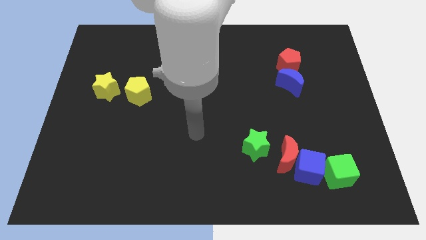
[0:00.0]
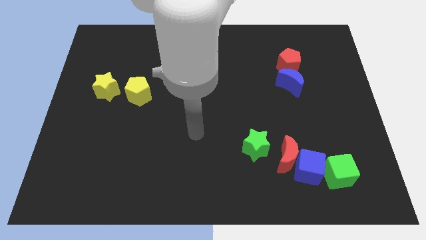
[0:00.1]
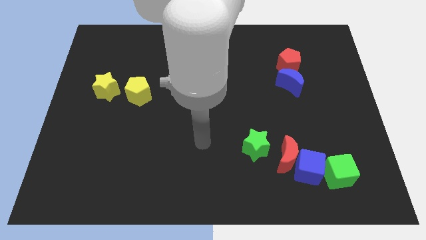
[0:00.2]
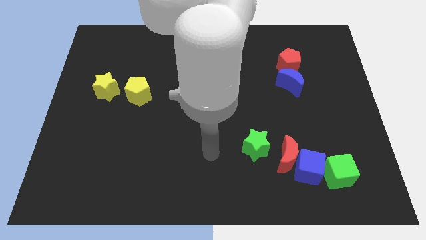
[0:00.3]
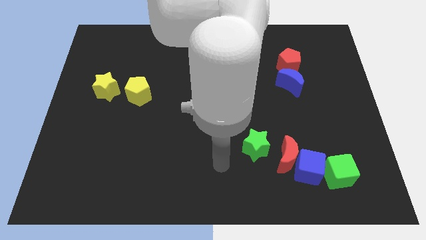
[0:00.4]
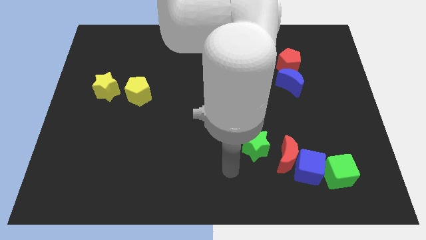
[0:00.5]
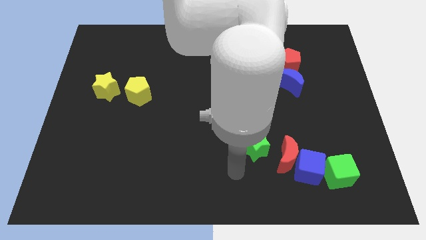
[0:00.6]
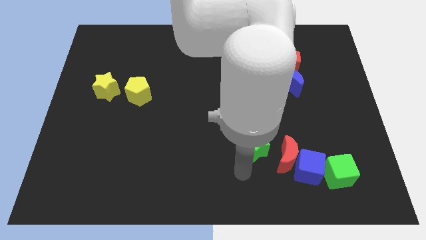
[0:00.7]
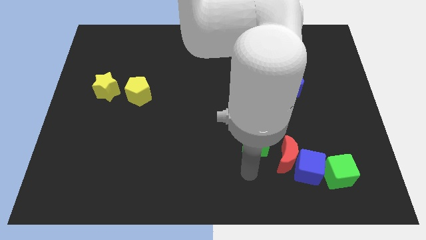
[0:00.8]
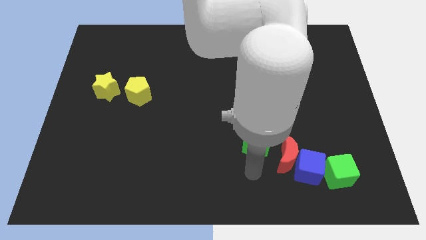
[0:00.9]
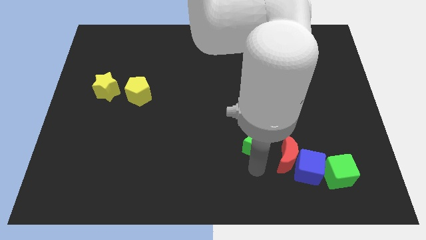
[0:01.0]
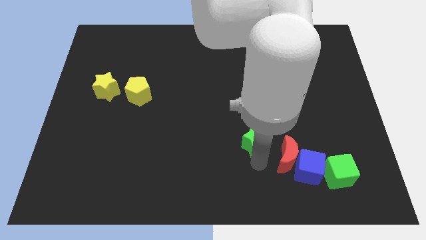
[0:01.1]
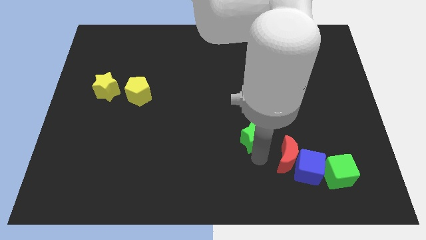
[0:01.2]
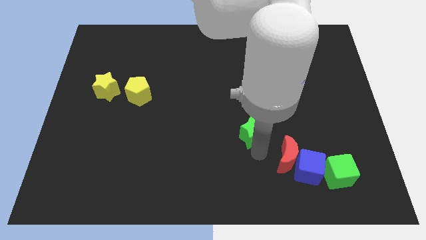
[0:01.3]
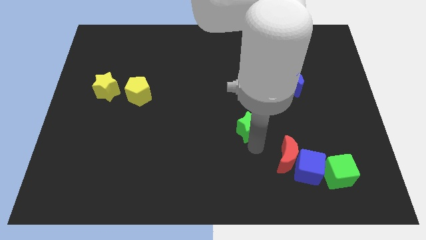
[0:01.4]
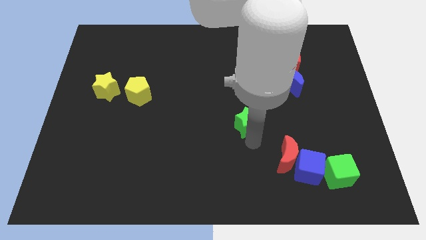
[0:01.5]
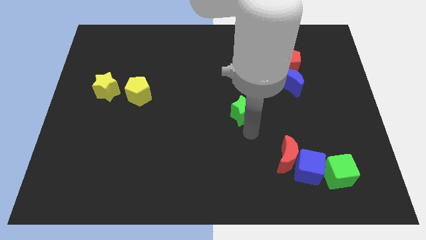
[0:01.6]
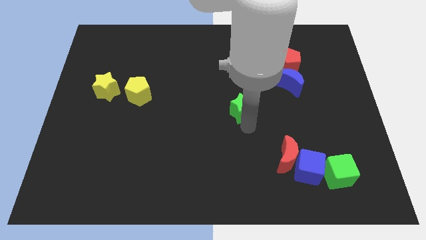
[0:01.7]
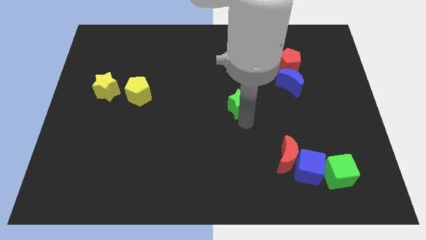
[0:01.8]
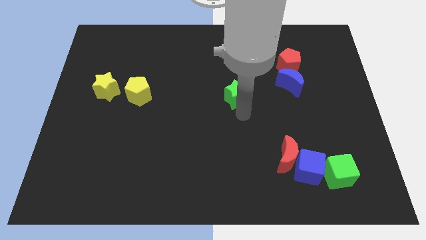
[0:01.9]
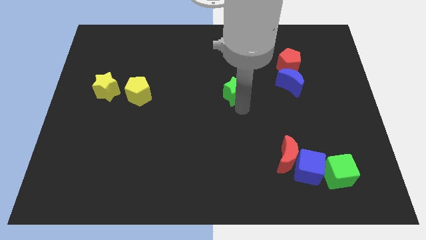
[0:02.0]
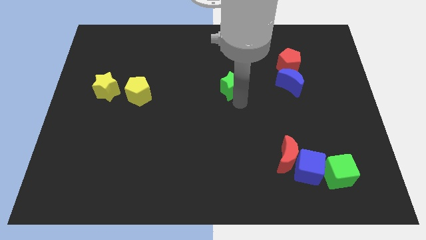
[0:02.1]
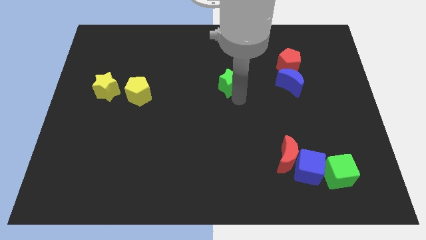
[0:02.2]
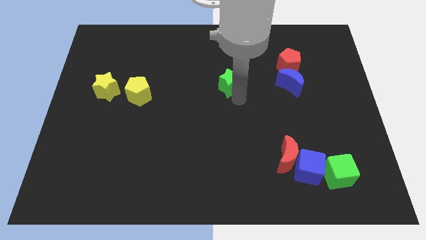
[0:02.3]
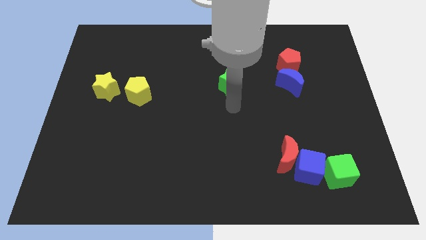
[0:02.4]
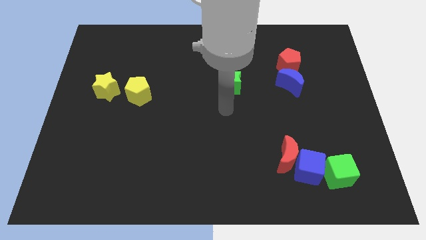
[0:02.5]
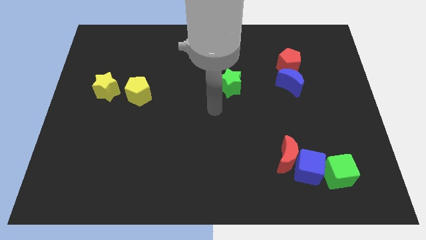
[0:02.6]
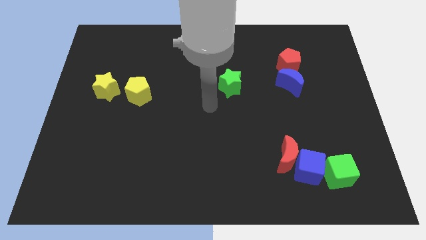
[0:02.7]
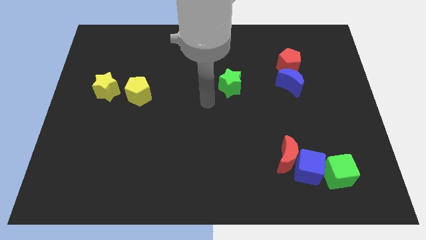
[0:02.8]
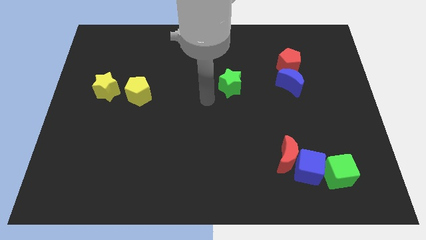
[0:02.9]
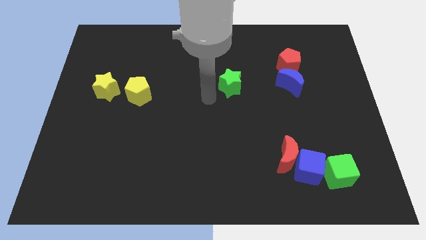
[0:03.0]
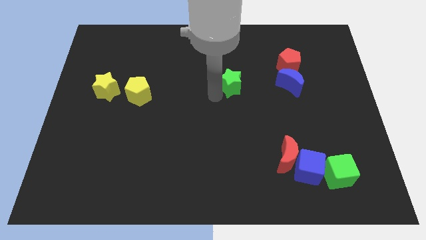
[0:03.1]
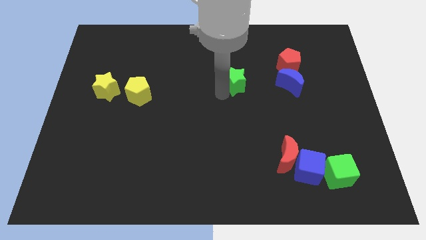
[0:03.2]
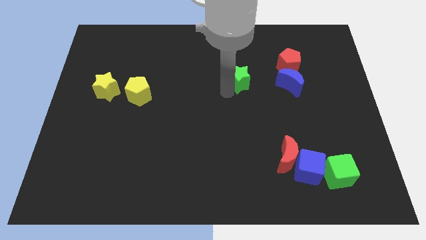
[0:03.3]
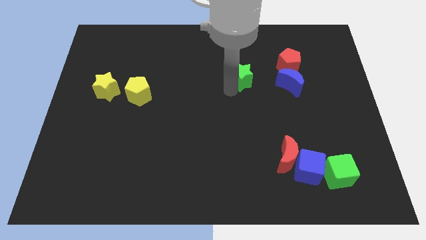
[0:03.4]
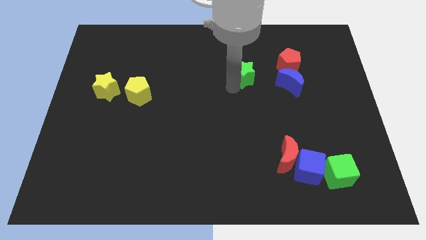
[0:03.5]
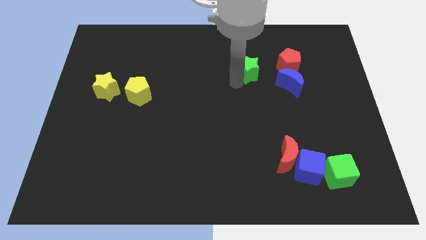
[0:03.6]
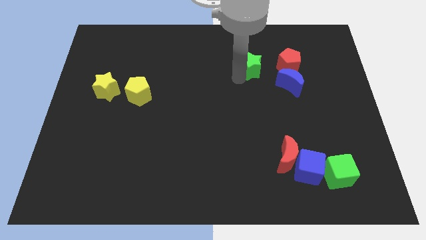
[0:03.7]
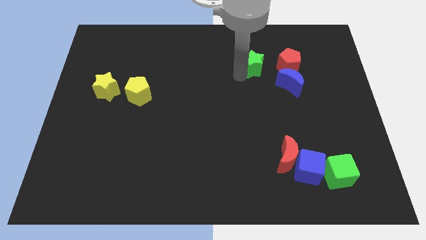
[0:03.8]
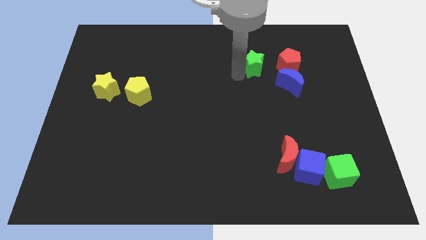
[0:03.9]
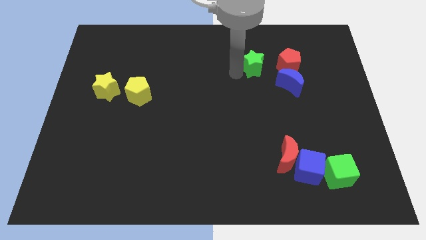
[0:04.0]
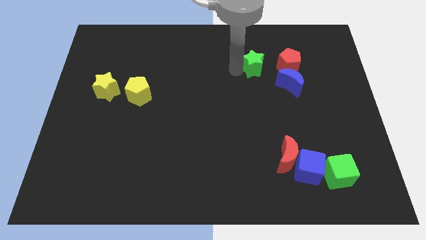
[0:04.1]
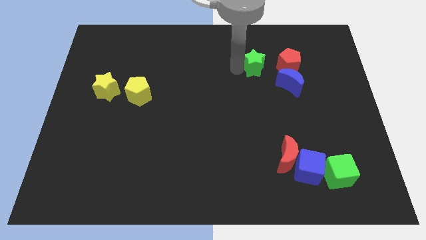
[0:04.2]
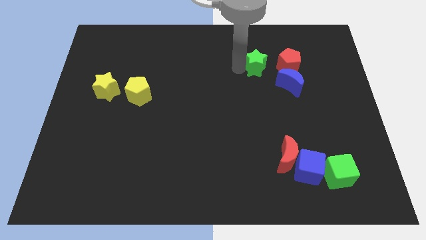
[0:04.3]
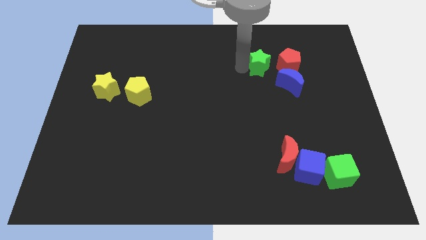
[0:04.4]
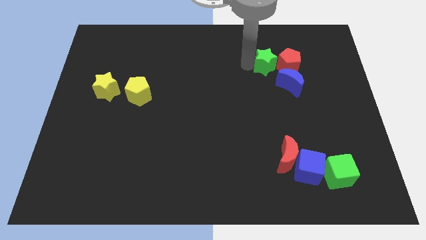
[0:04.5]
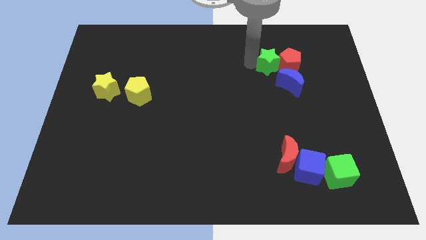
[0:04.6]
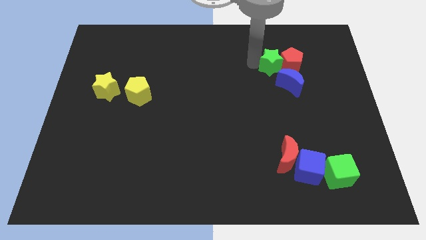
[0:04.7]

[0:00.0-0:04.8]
move the green star close to the red pentagon

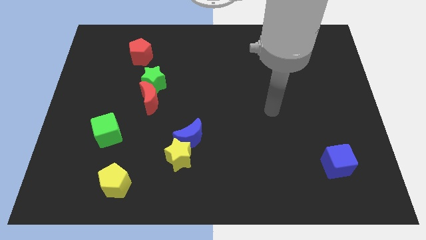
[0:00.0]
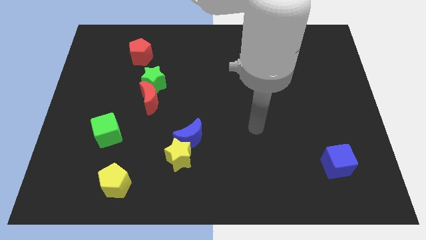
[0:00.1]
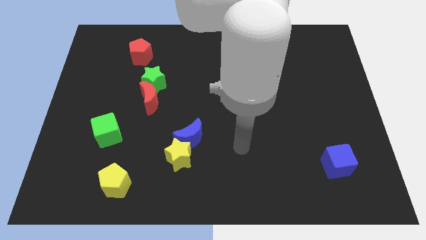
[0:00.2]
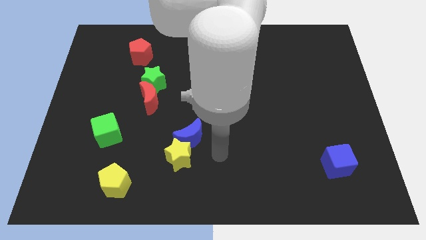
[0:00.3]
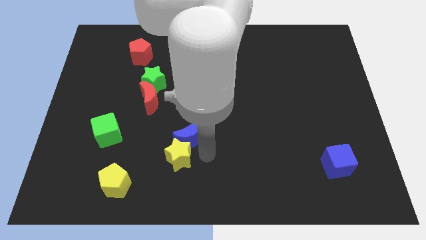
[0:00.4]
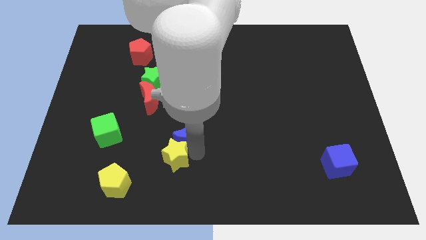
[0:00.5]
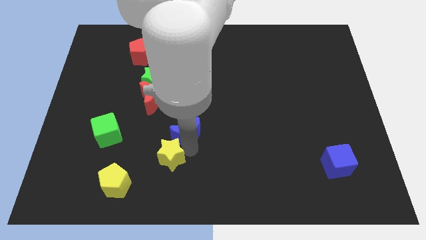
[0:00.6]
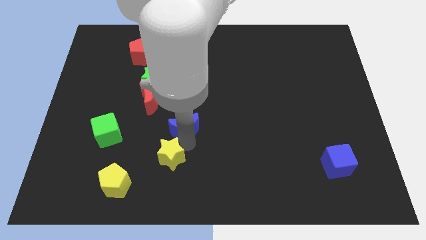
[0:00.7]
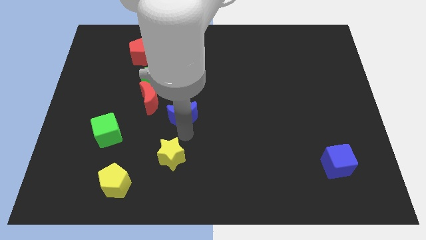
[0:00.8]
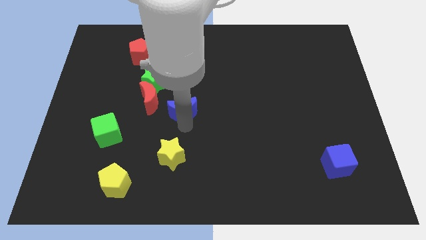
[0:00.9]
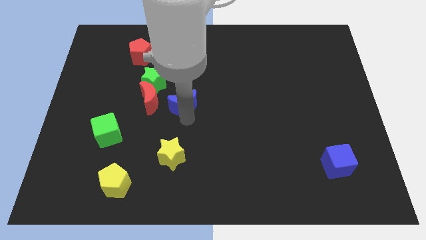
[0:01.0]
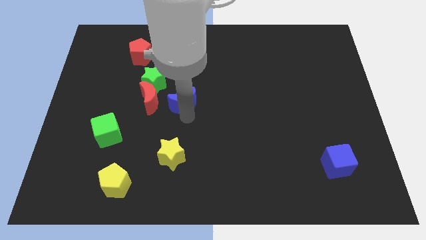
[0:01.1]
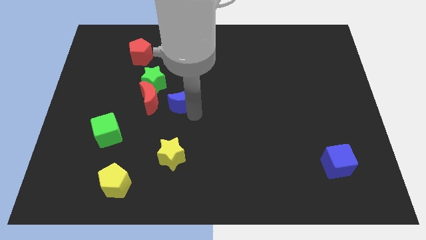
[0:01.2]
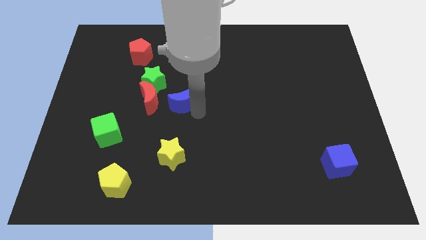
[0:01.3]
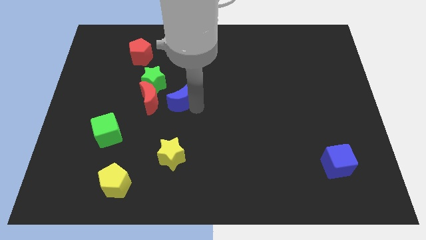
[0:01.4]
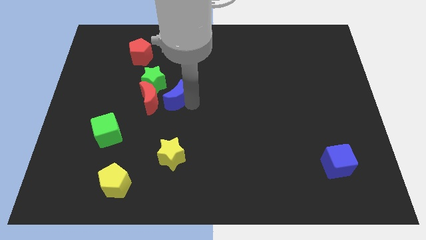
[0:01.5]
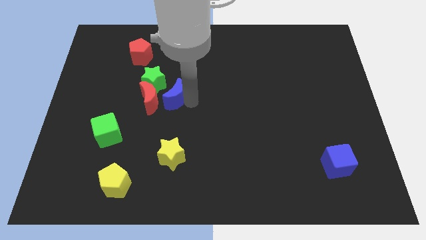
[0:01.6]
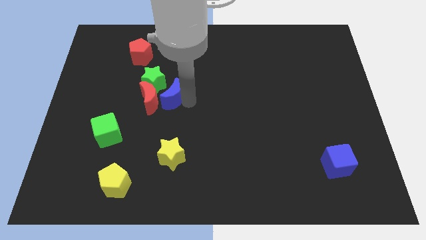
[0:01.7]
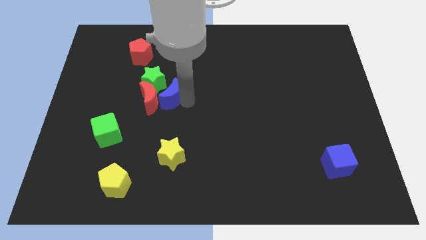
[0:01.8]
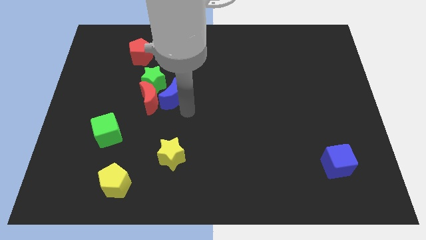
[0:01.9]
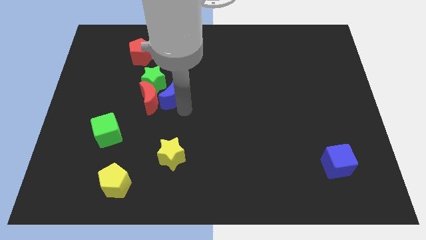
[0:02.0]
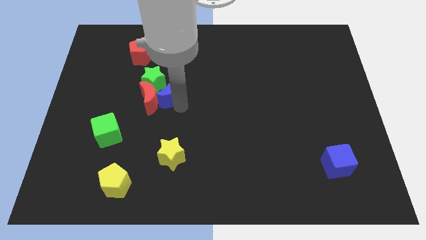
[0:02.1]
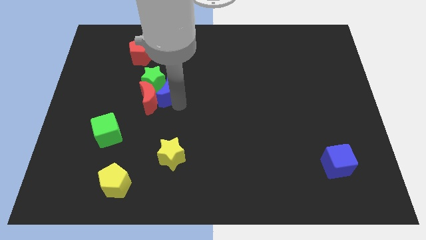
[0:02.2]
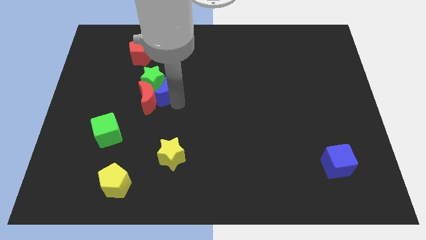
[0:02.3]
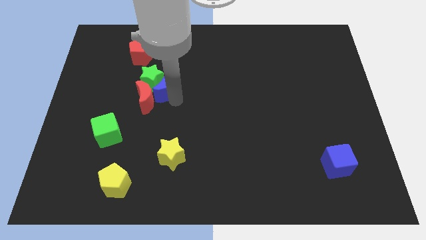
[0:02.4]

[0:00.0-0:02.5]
slide the blue moon close to the green star

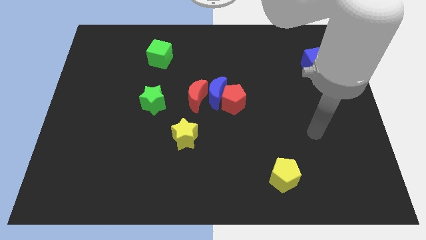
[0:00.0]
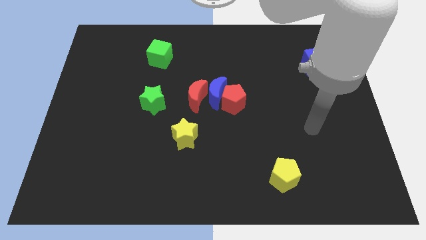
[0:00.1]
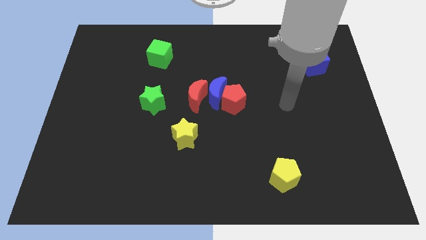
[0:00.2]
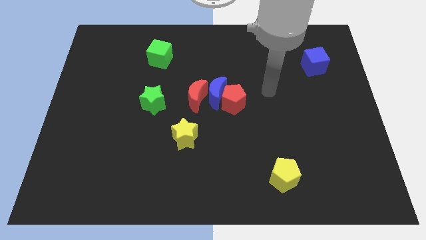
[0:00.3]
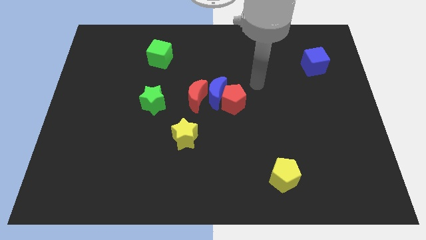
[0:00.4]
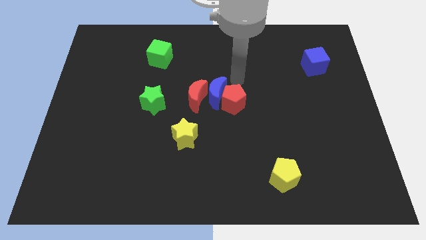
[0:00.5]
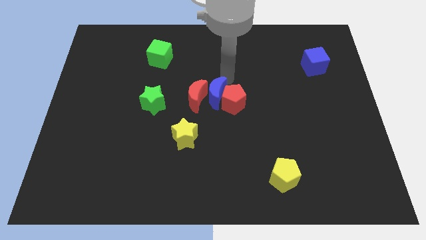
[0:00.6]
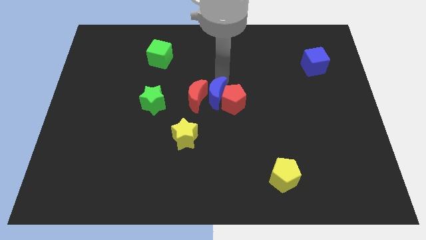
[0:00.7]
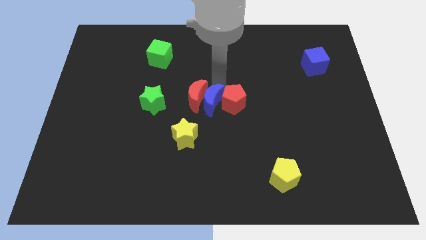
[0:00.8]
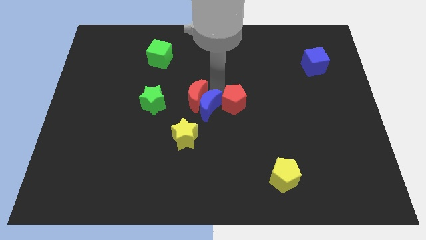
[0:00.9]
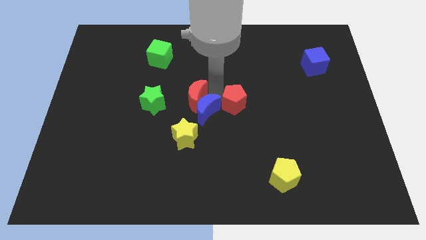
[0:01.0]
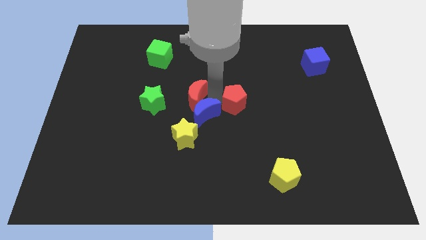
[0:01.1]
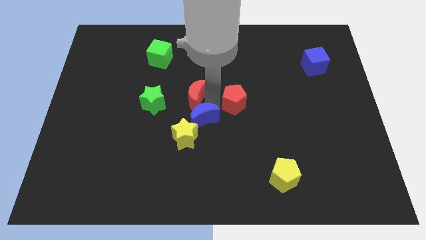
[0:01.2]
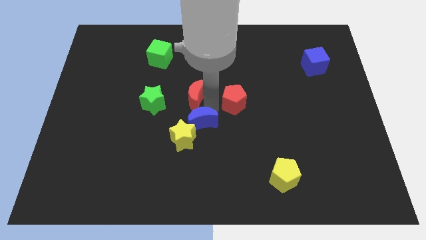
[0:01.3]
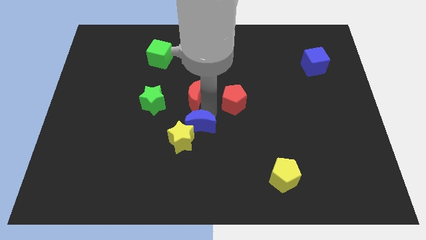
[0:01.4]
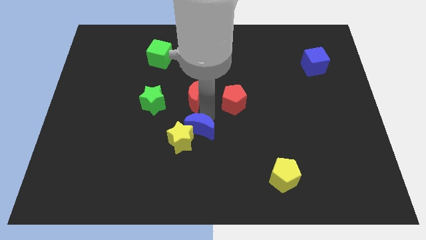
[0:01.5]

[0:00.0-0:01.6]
move the blue moon to the yellow star
